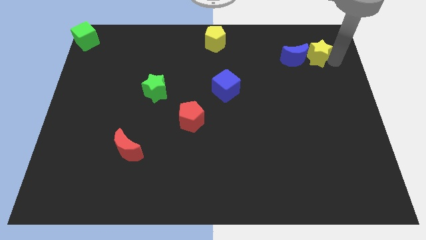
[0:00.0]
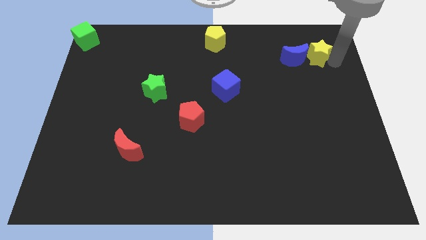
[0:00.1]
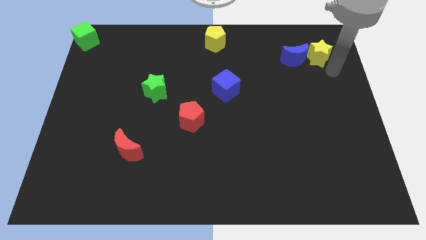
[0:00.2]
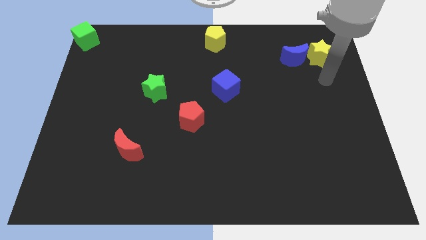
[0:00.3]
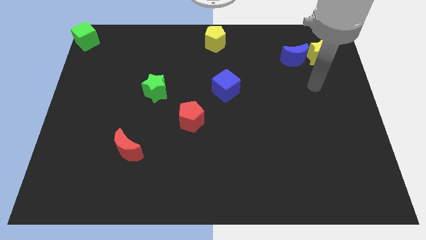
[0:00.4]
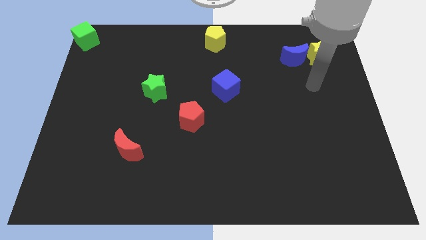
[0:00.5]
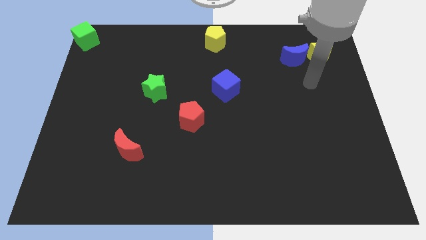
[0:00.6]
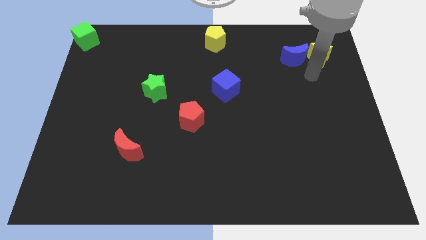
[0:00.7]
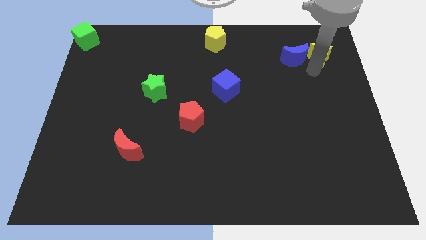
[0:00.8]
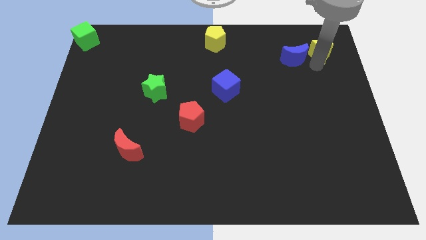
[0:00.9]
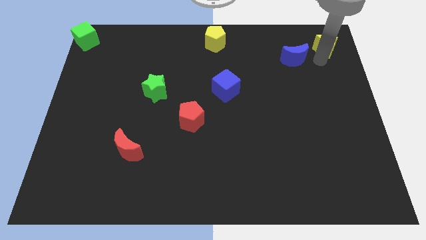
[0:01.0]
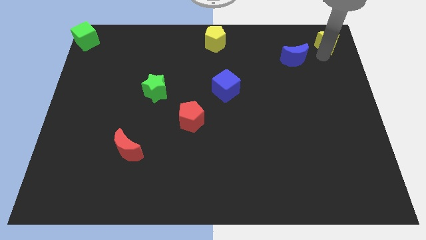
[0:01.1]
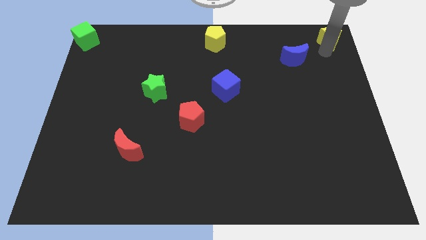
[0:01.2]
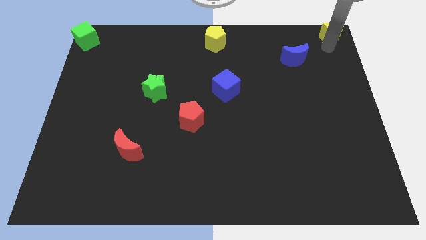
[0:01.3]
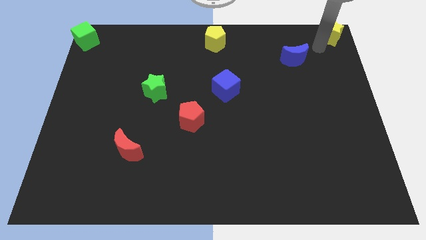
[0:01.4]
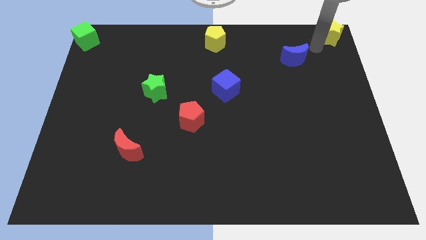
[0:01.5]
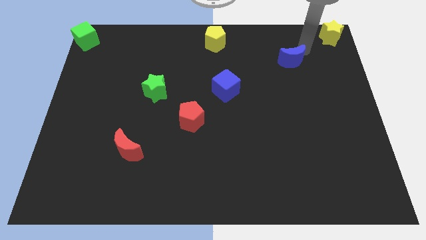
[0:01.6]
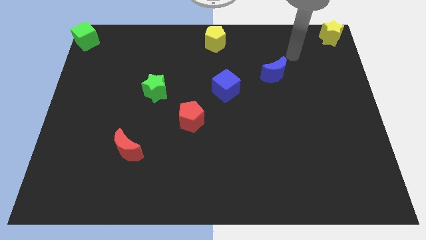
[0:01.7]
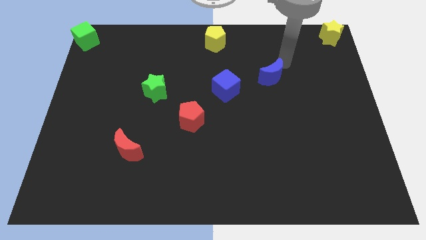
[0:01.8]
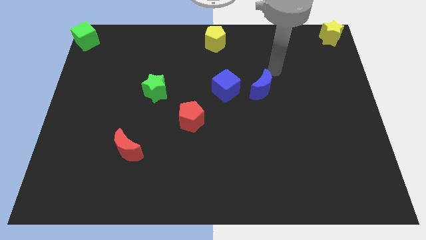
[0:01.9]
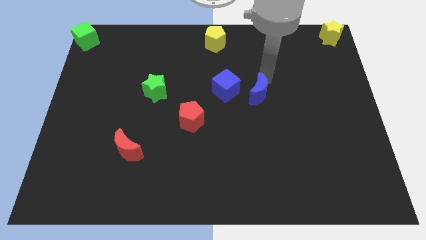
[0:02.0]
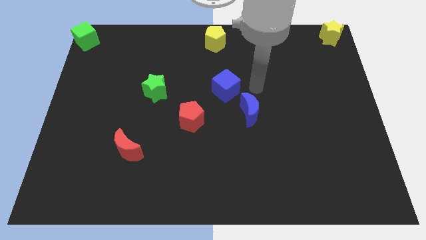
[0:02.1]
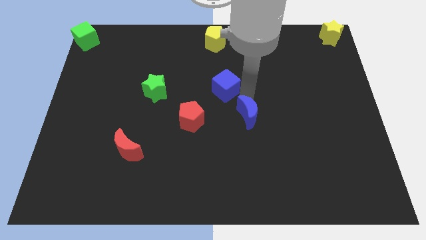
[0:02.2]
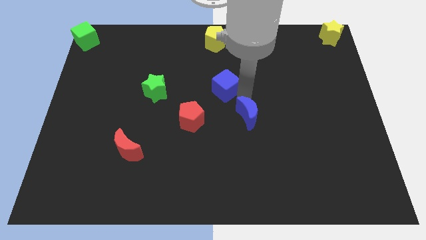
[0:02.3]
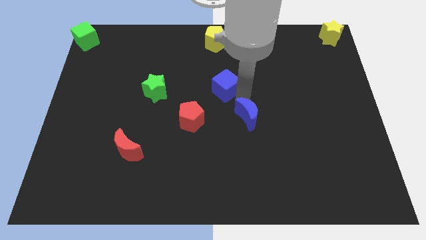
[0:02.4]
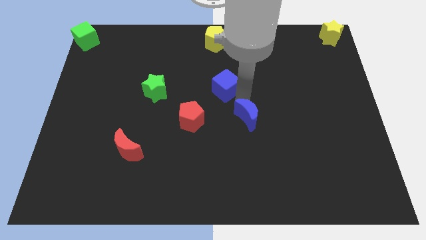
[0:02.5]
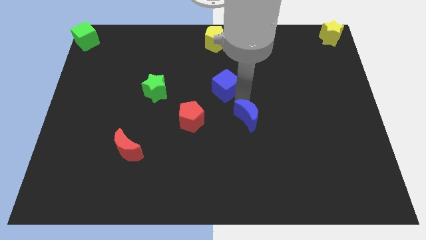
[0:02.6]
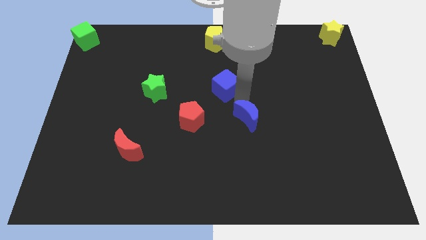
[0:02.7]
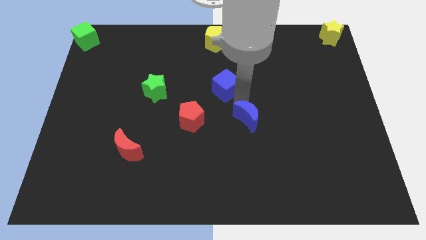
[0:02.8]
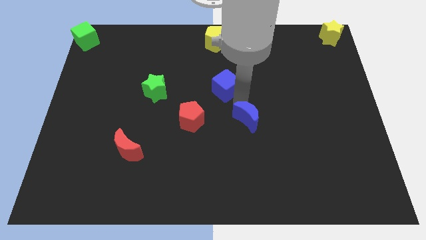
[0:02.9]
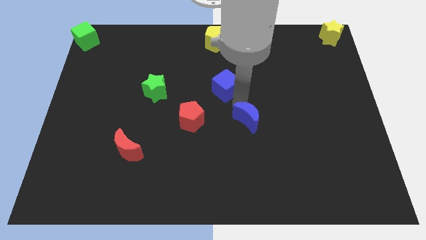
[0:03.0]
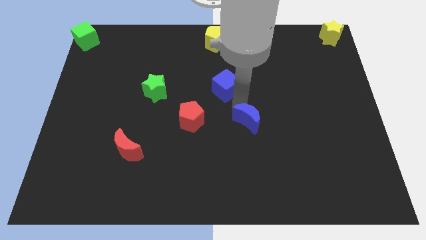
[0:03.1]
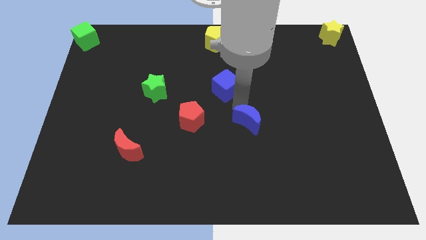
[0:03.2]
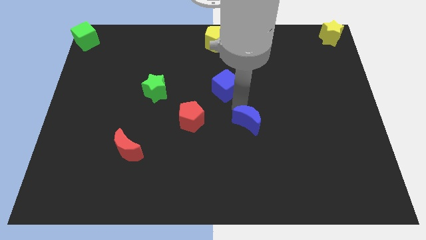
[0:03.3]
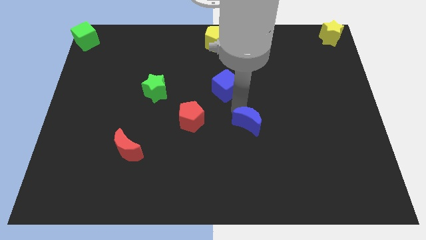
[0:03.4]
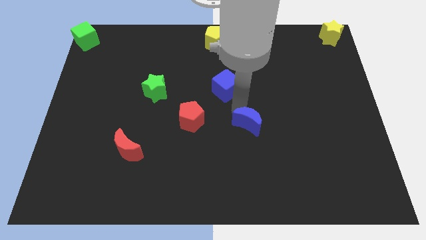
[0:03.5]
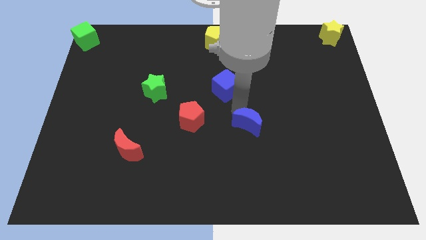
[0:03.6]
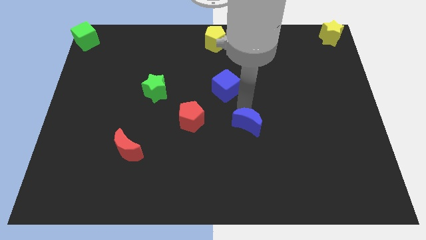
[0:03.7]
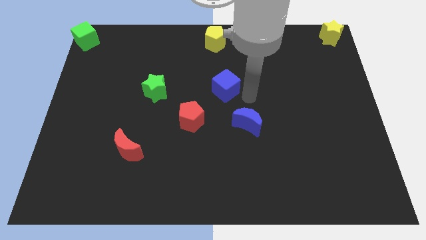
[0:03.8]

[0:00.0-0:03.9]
separate the yellow star and blue semicircle

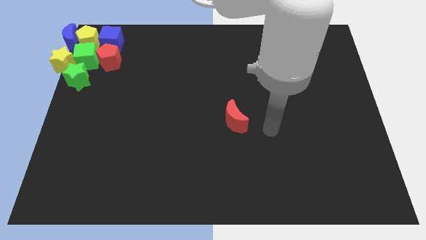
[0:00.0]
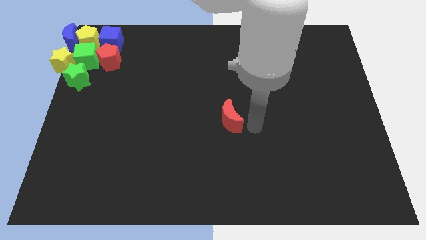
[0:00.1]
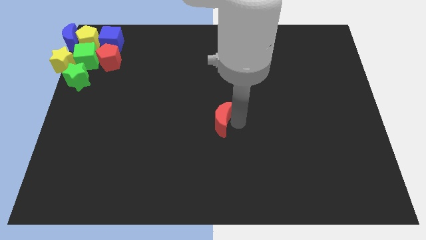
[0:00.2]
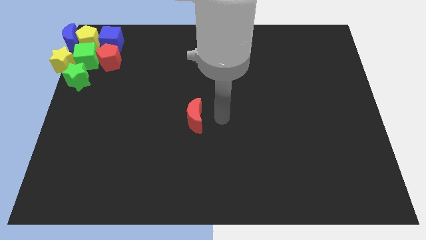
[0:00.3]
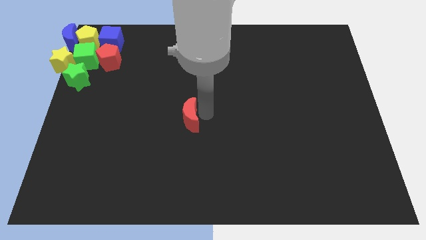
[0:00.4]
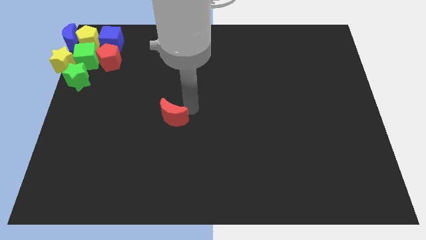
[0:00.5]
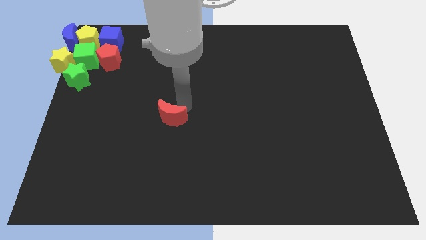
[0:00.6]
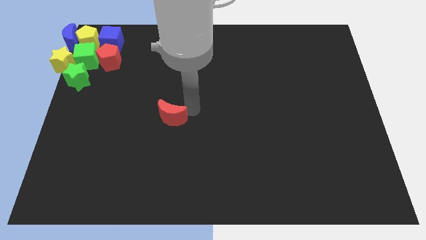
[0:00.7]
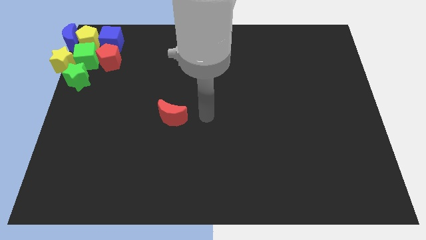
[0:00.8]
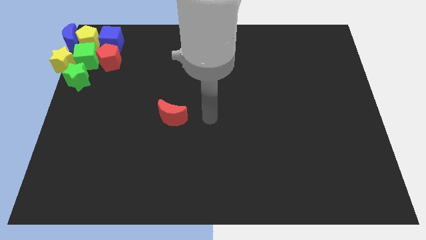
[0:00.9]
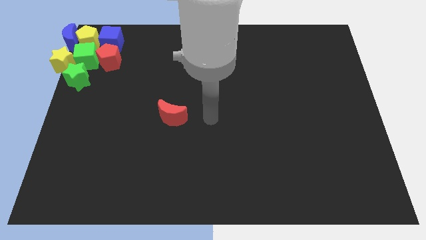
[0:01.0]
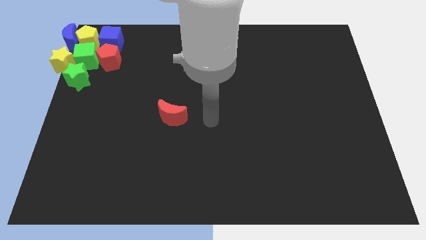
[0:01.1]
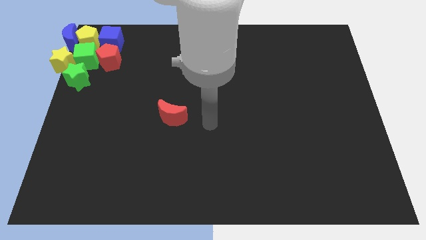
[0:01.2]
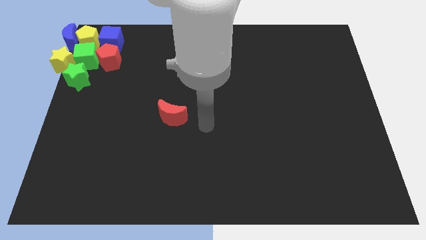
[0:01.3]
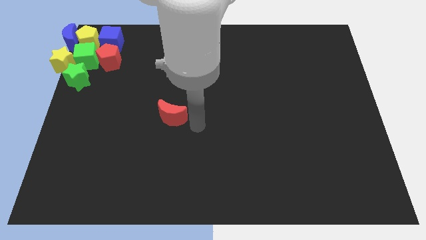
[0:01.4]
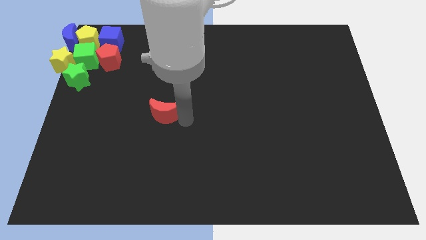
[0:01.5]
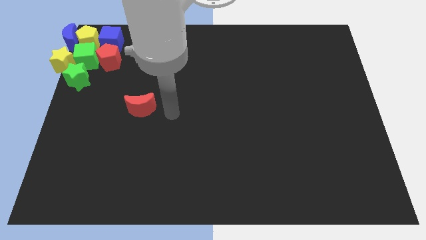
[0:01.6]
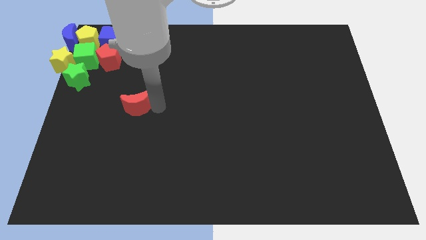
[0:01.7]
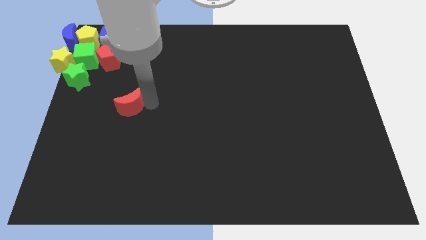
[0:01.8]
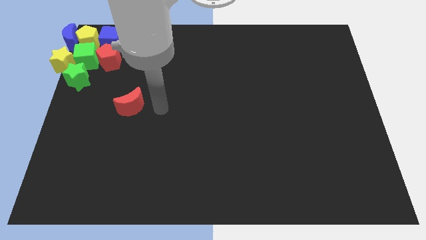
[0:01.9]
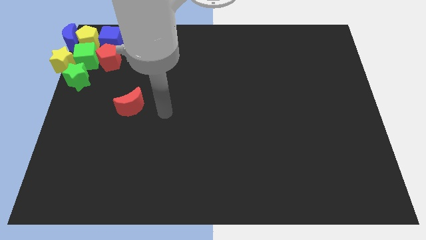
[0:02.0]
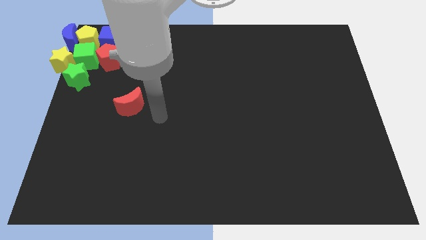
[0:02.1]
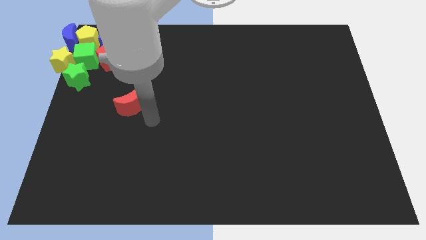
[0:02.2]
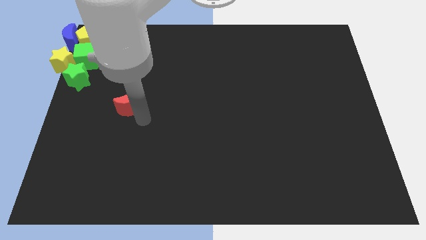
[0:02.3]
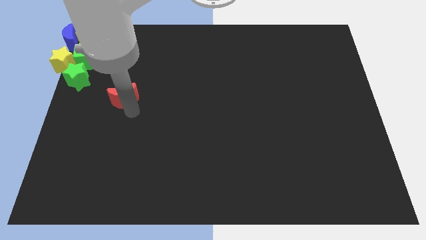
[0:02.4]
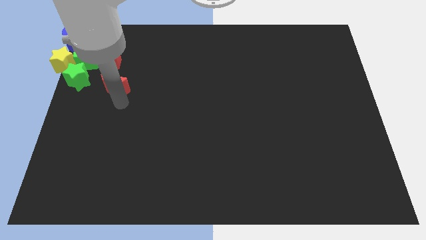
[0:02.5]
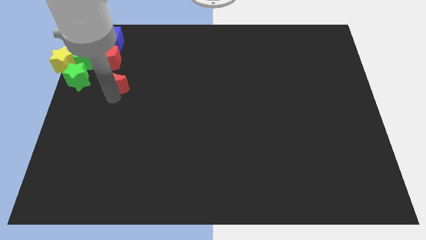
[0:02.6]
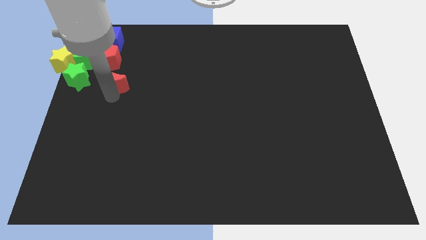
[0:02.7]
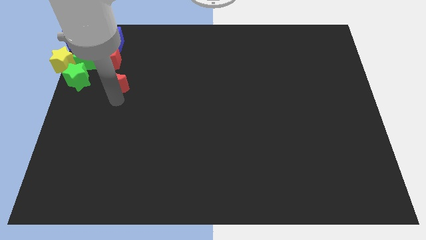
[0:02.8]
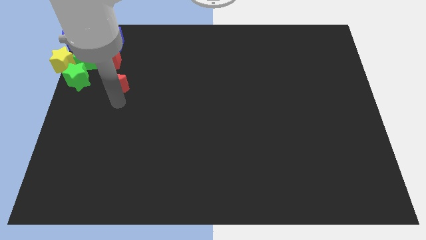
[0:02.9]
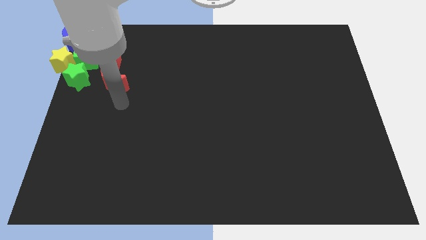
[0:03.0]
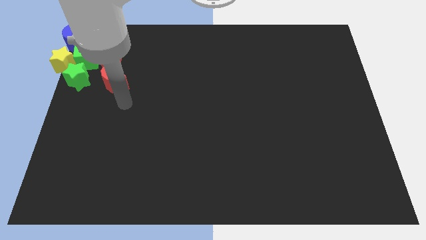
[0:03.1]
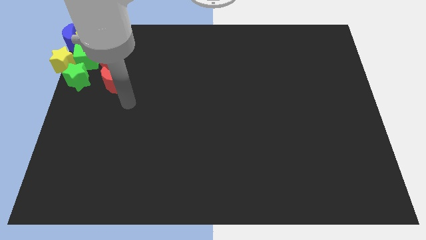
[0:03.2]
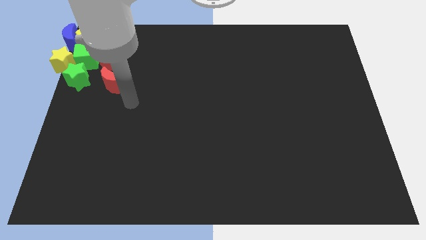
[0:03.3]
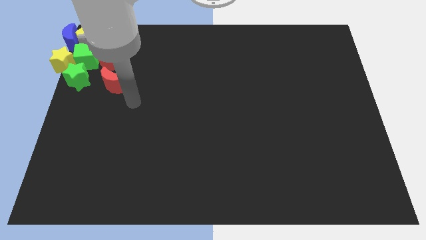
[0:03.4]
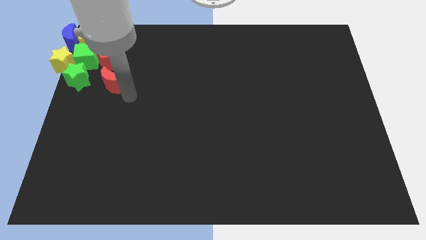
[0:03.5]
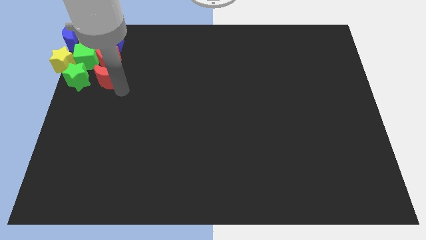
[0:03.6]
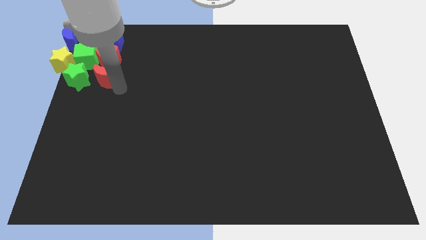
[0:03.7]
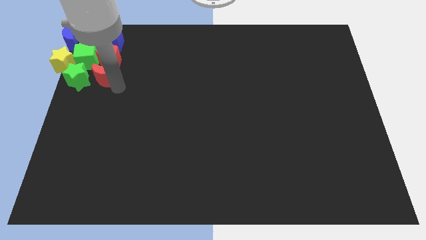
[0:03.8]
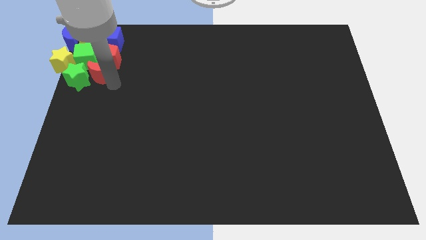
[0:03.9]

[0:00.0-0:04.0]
place the red moon at the bottom of red pentagon

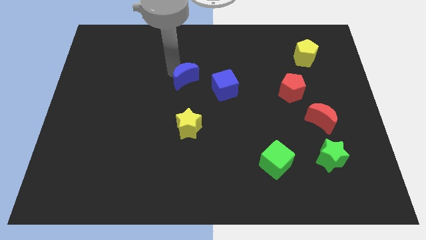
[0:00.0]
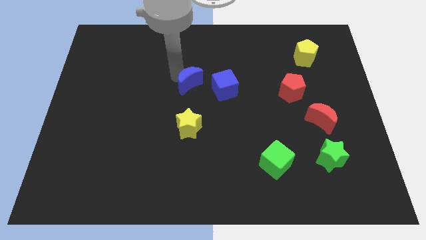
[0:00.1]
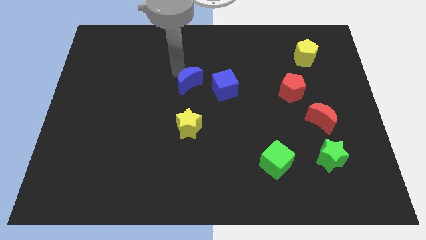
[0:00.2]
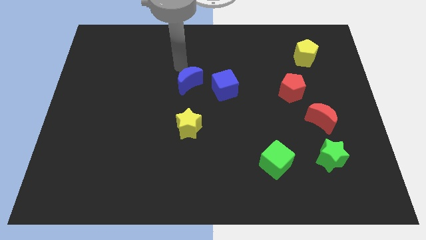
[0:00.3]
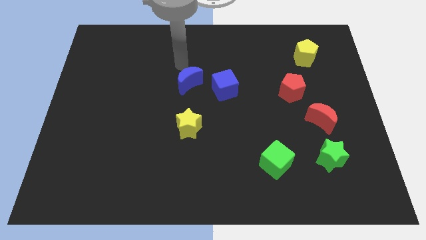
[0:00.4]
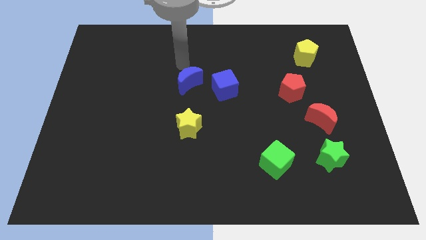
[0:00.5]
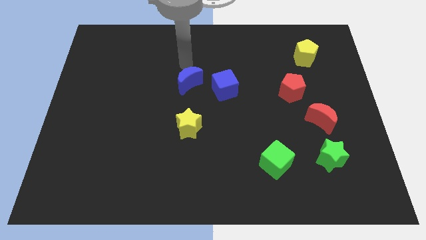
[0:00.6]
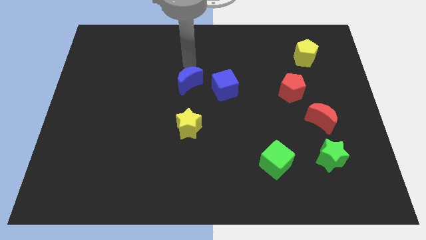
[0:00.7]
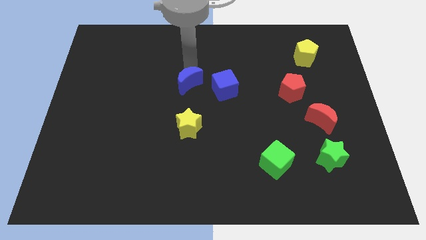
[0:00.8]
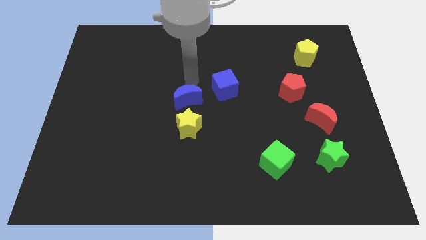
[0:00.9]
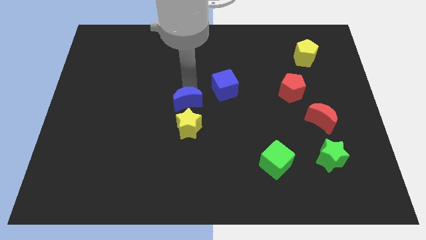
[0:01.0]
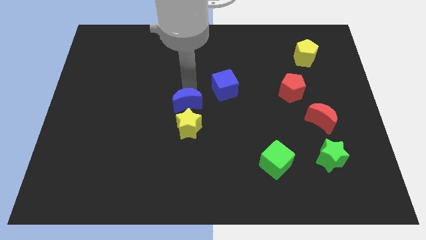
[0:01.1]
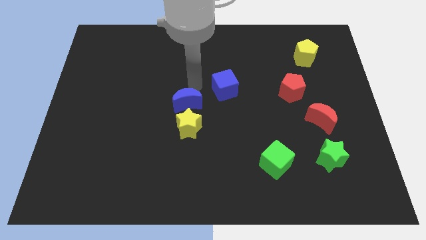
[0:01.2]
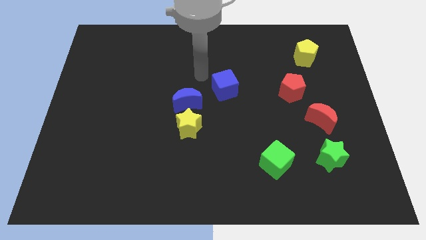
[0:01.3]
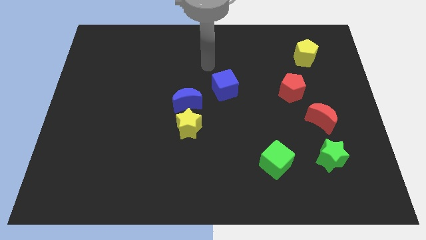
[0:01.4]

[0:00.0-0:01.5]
place blue crescent above yellow star
